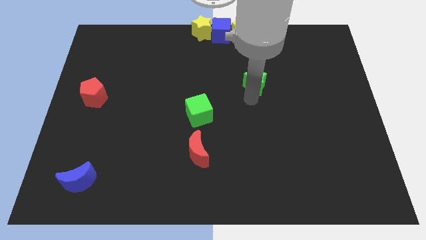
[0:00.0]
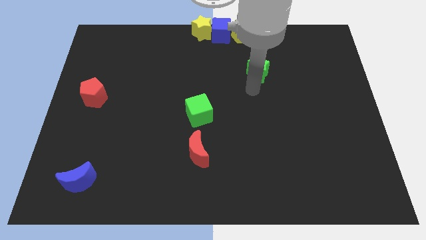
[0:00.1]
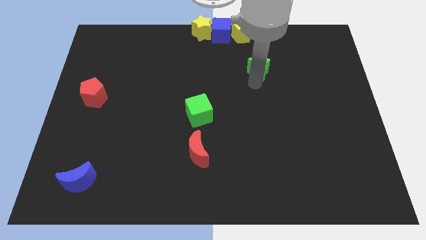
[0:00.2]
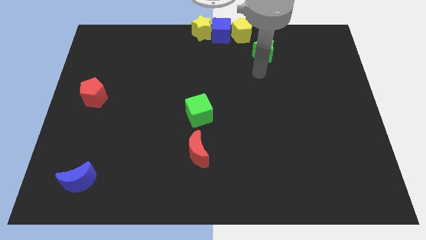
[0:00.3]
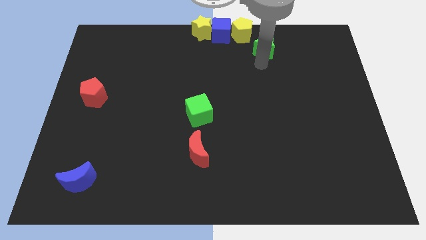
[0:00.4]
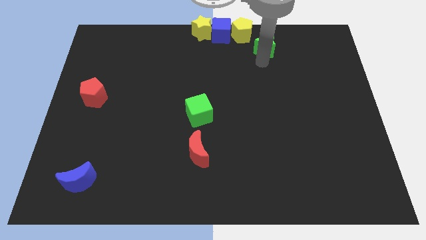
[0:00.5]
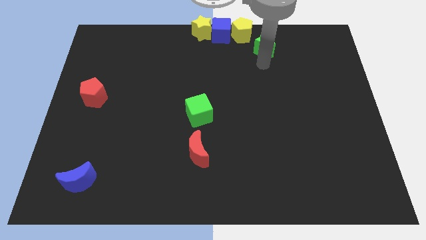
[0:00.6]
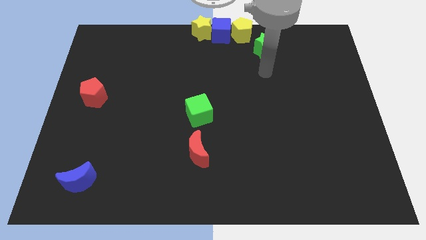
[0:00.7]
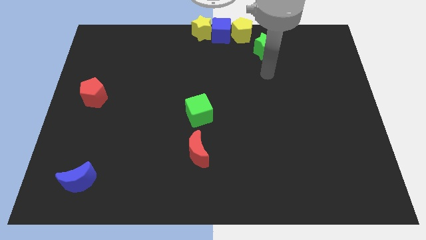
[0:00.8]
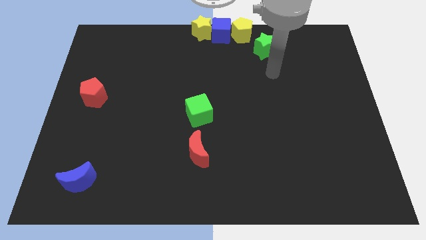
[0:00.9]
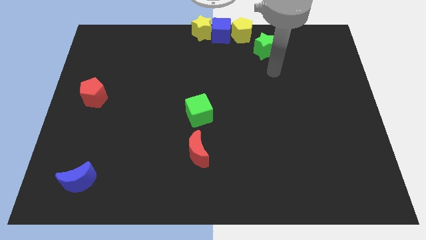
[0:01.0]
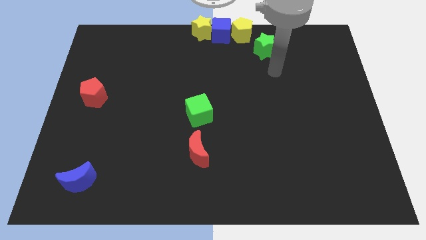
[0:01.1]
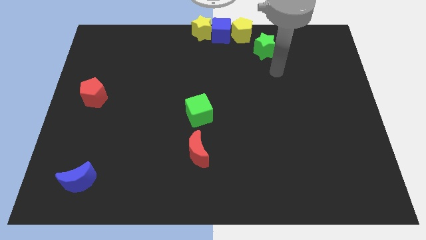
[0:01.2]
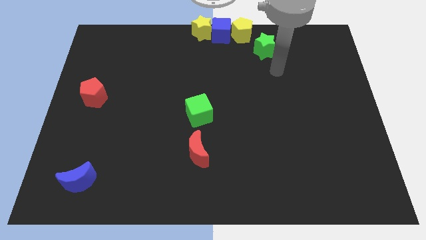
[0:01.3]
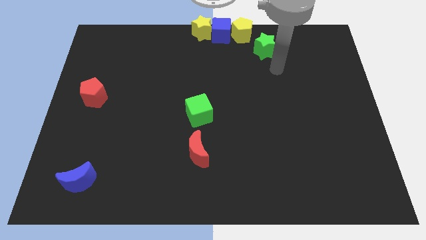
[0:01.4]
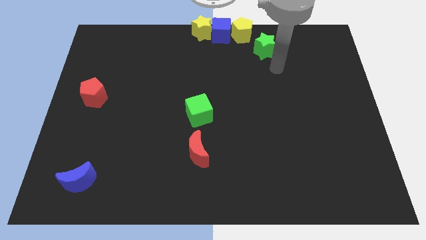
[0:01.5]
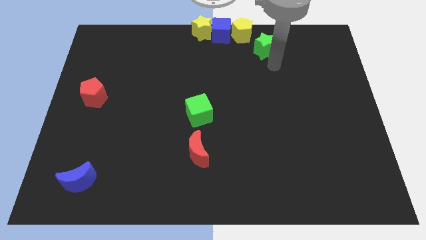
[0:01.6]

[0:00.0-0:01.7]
slide the green star to the bottom right of the yellow pentagon

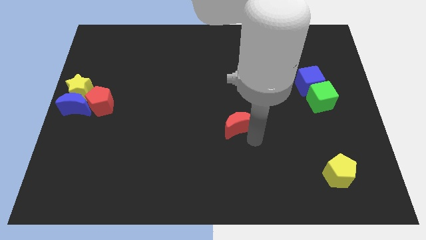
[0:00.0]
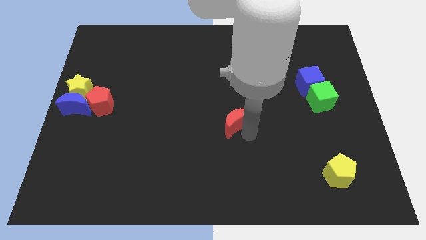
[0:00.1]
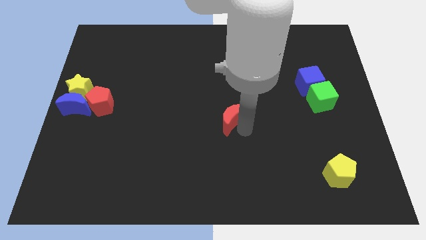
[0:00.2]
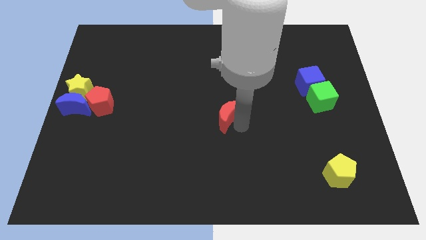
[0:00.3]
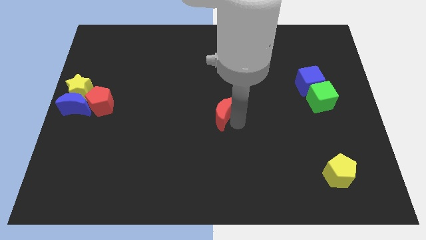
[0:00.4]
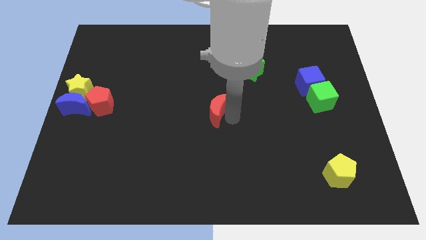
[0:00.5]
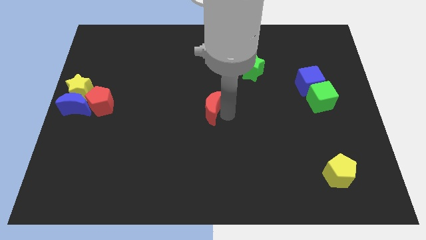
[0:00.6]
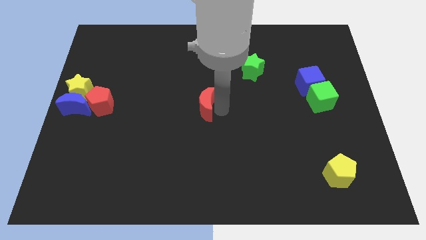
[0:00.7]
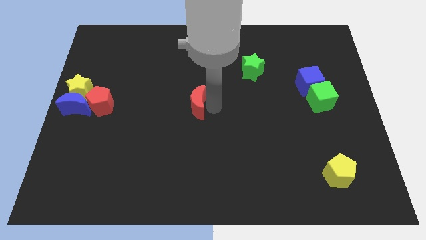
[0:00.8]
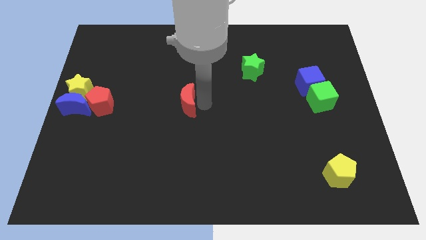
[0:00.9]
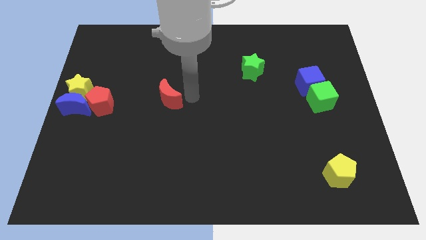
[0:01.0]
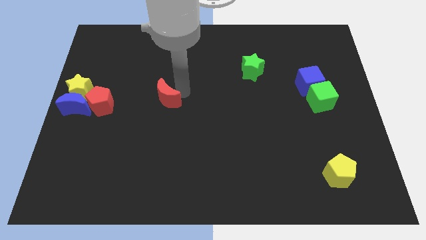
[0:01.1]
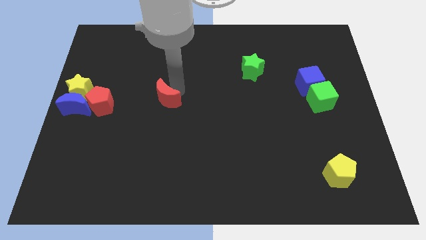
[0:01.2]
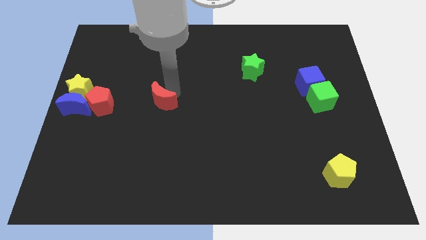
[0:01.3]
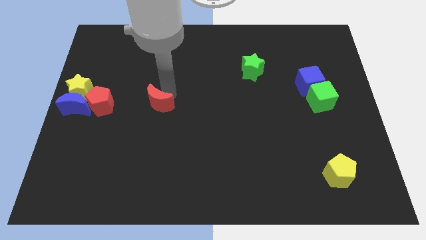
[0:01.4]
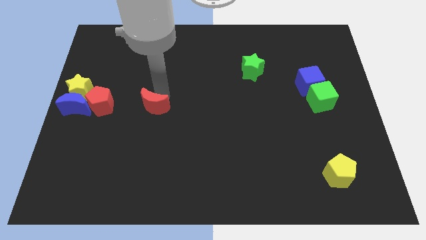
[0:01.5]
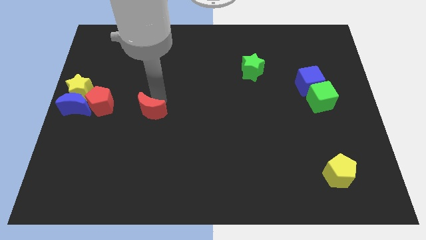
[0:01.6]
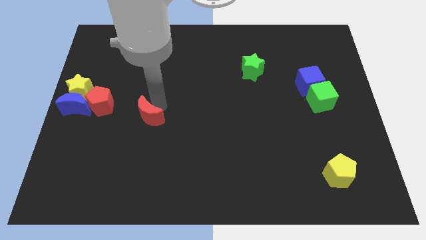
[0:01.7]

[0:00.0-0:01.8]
slide the red moon towards the red pentagon

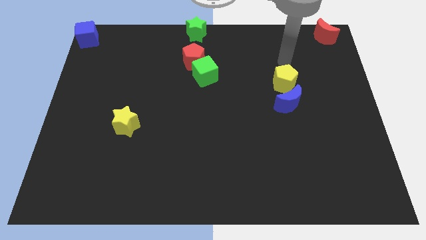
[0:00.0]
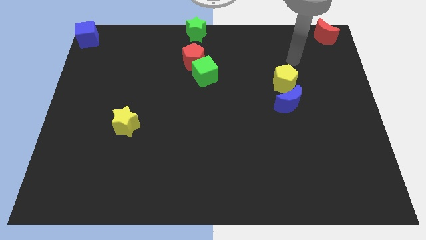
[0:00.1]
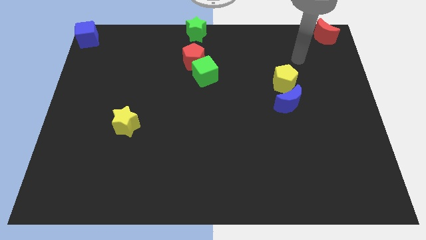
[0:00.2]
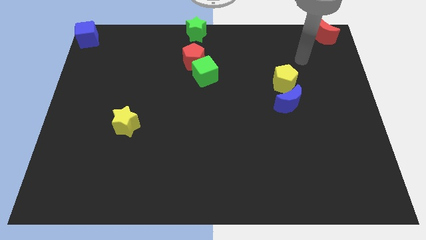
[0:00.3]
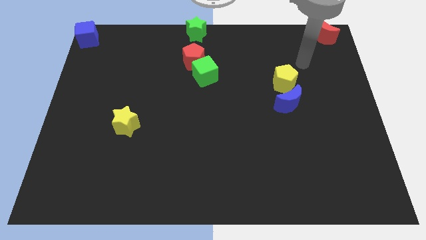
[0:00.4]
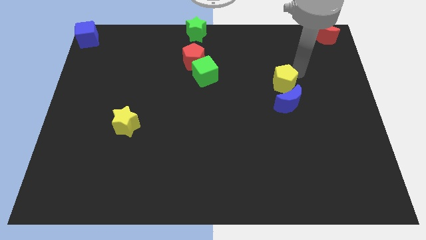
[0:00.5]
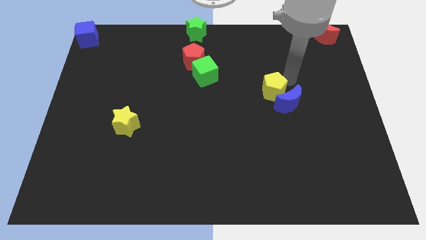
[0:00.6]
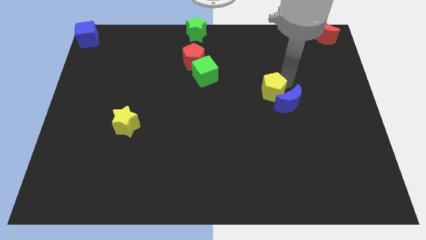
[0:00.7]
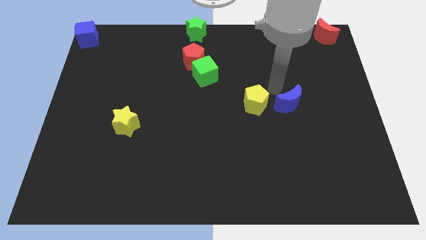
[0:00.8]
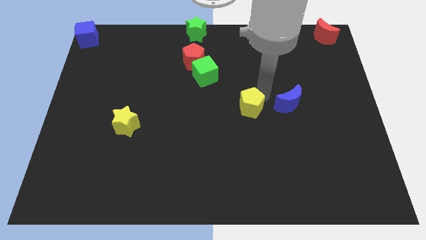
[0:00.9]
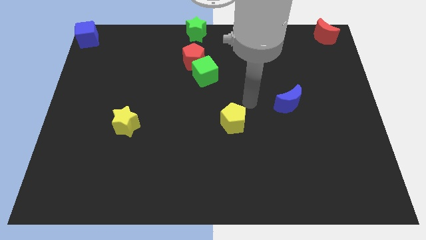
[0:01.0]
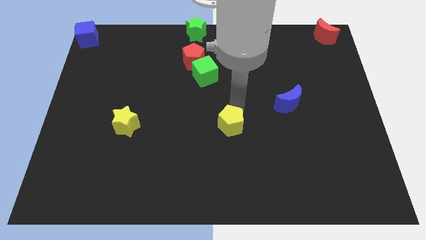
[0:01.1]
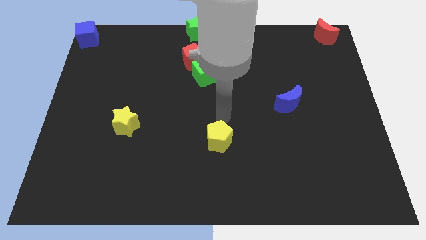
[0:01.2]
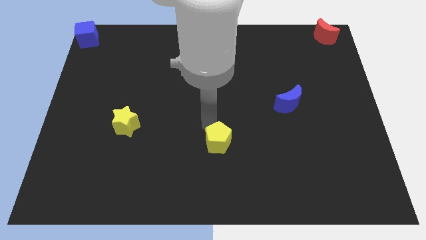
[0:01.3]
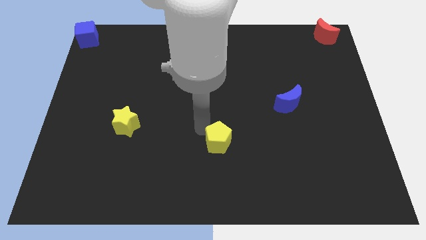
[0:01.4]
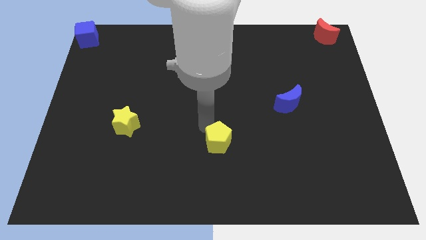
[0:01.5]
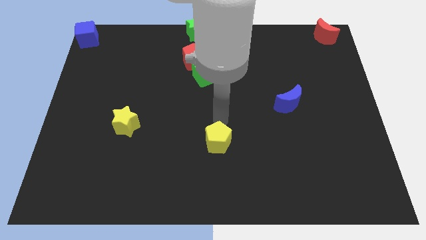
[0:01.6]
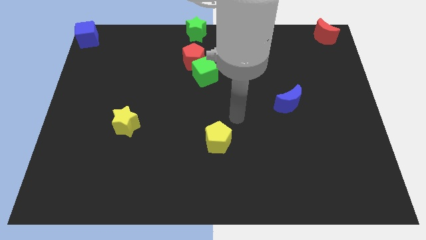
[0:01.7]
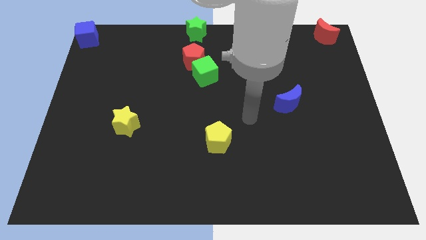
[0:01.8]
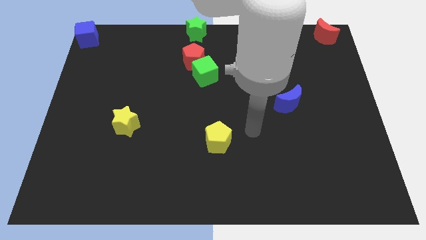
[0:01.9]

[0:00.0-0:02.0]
push the yellow pentagon to the bottom side of the board

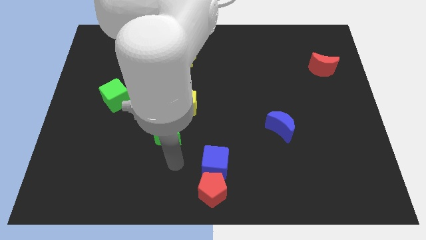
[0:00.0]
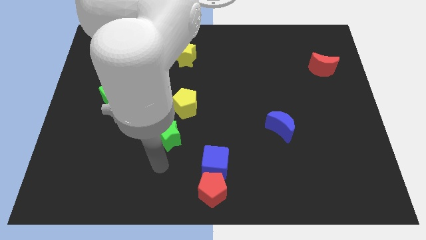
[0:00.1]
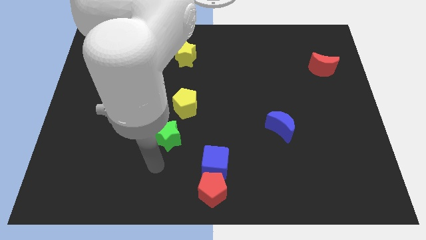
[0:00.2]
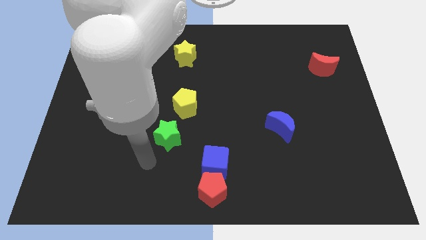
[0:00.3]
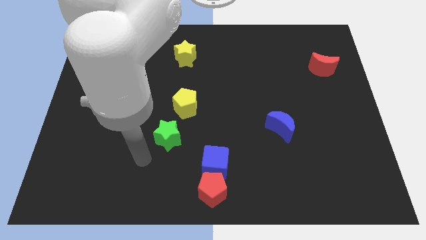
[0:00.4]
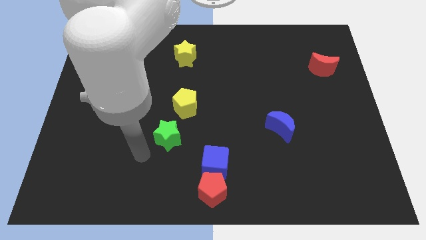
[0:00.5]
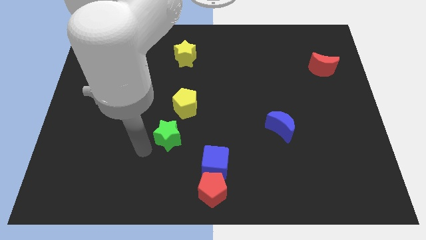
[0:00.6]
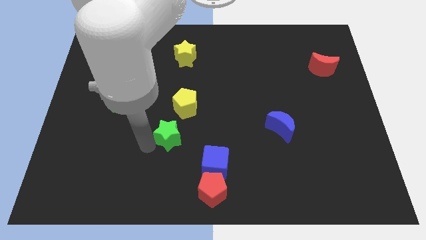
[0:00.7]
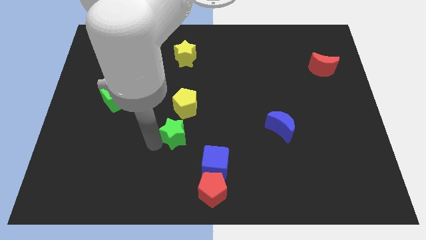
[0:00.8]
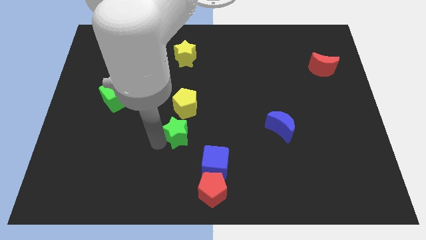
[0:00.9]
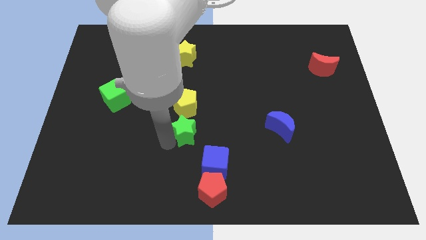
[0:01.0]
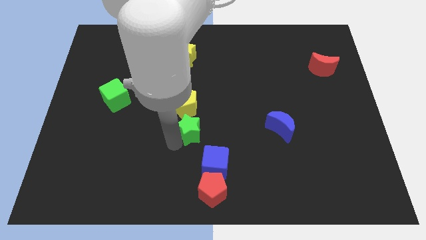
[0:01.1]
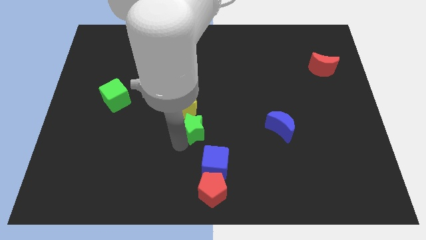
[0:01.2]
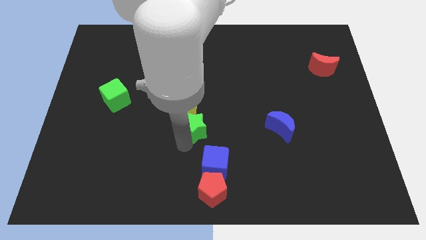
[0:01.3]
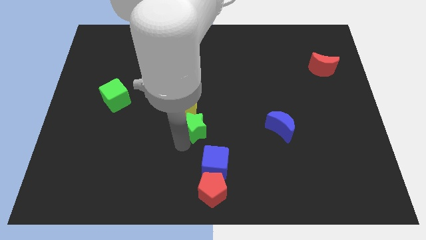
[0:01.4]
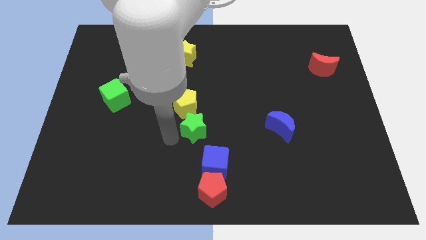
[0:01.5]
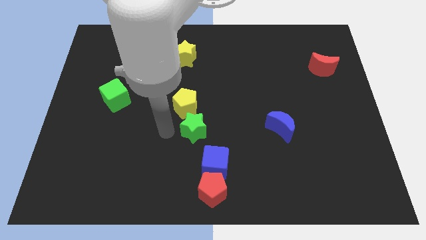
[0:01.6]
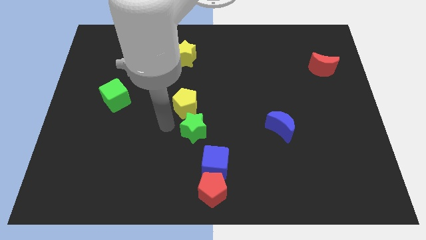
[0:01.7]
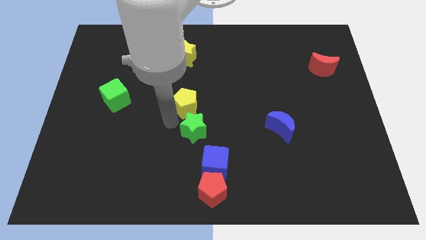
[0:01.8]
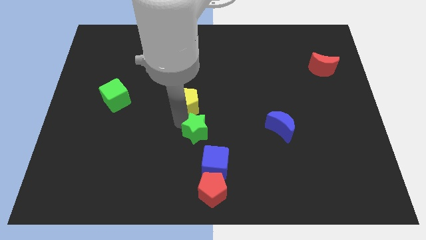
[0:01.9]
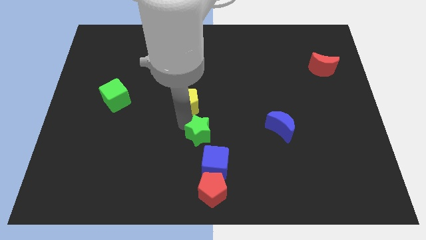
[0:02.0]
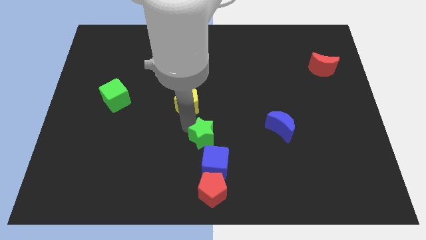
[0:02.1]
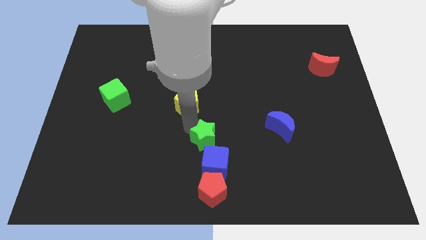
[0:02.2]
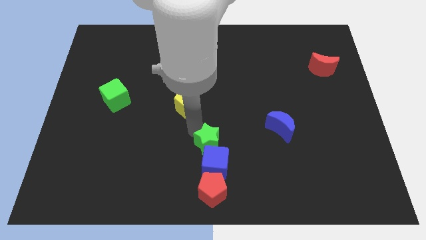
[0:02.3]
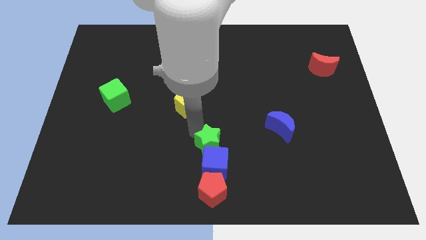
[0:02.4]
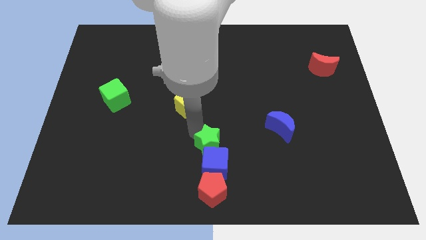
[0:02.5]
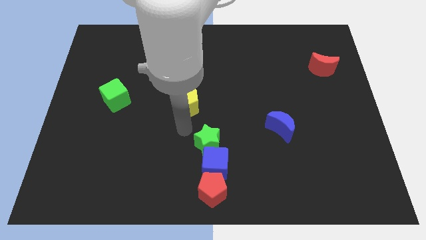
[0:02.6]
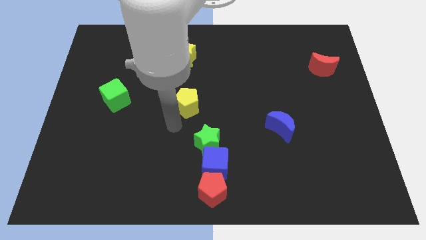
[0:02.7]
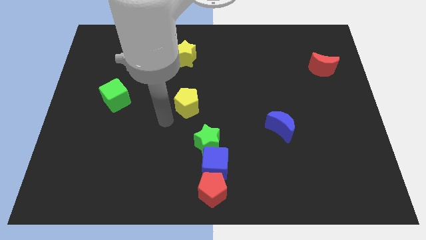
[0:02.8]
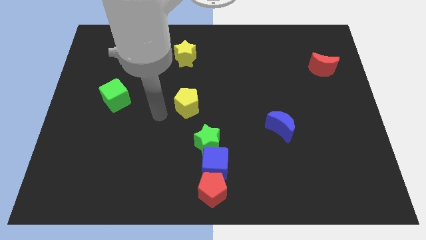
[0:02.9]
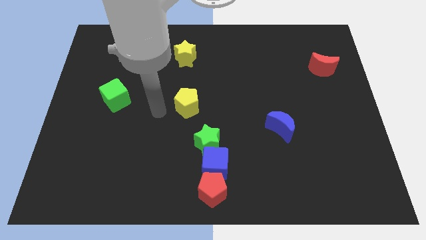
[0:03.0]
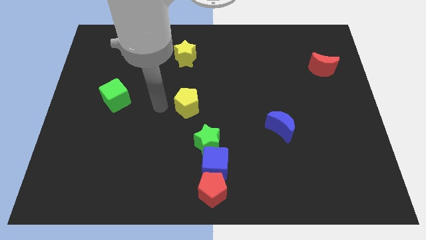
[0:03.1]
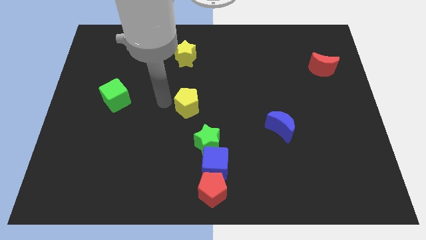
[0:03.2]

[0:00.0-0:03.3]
push the green star into the blue cube

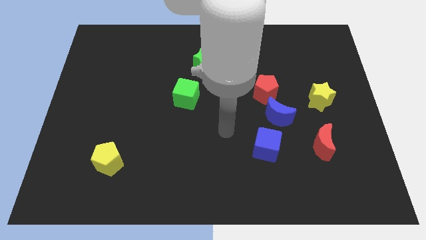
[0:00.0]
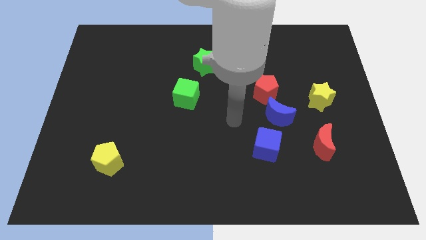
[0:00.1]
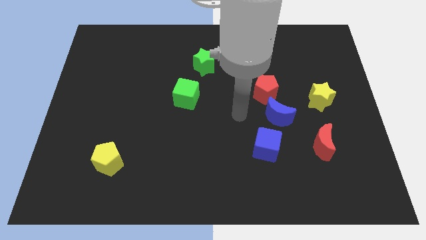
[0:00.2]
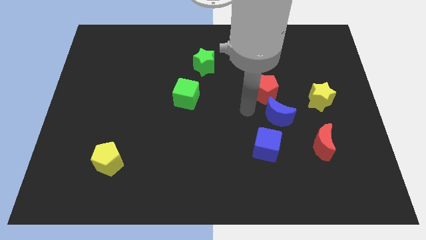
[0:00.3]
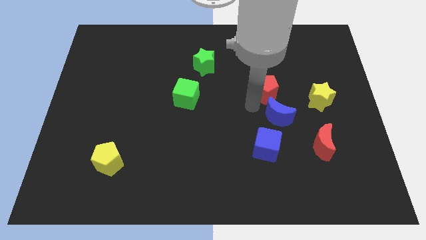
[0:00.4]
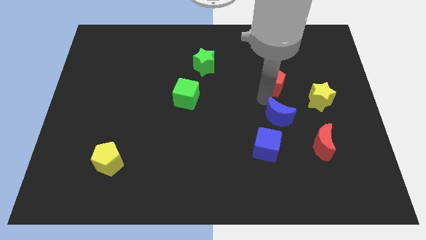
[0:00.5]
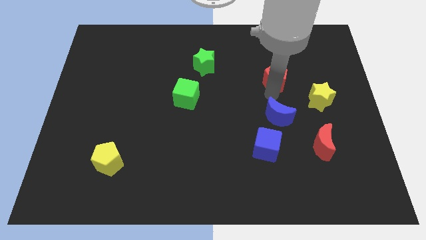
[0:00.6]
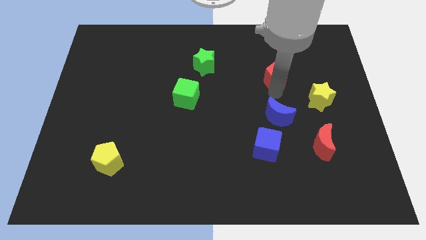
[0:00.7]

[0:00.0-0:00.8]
separate the blue moon and red pentagon
